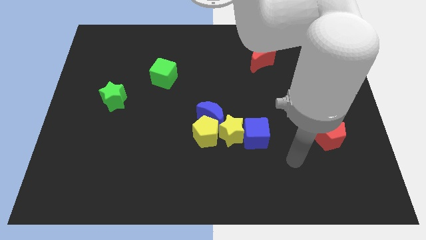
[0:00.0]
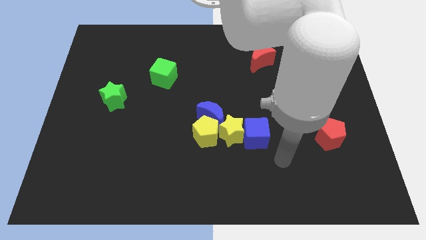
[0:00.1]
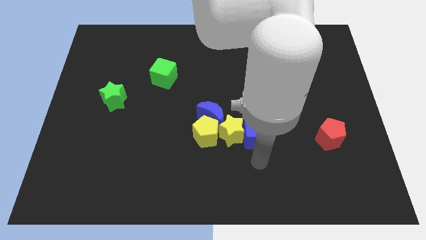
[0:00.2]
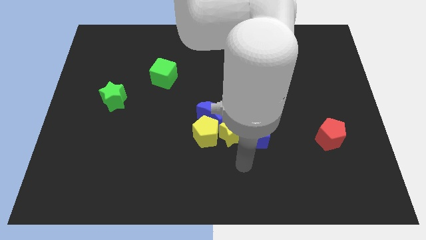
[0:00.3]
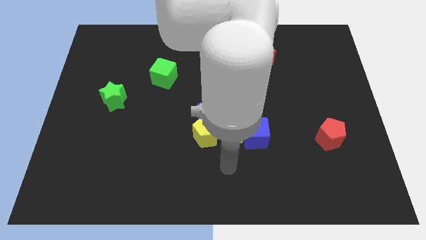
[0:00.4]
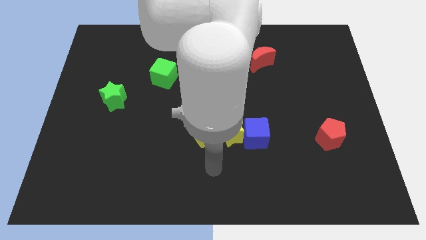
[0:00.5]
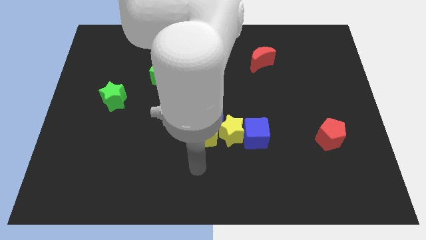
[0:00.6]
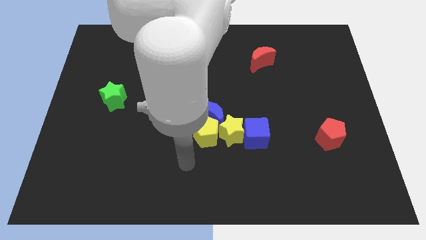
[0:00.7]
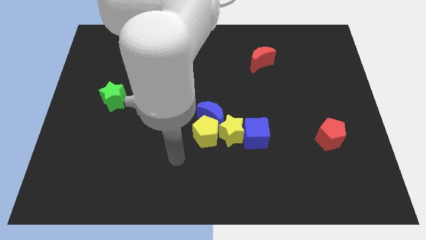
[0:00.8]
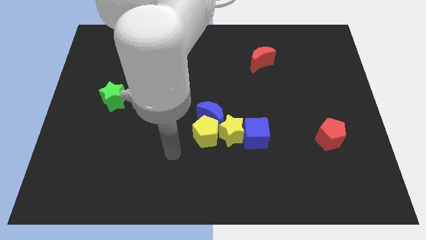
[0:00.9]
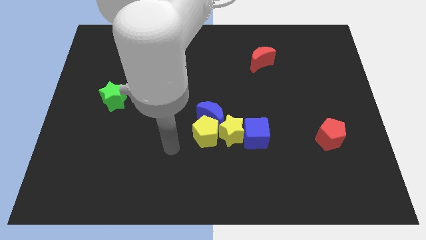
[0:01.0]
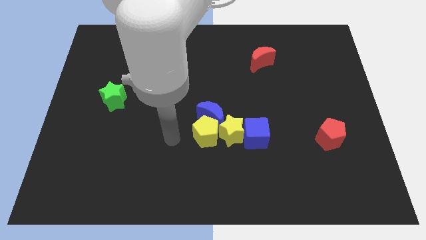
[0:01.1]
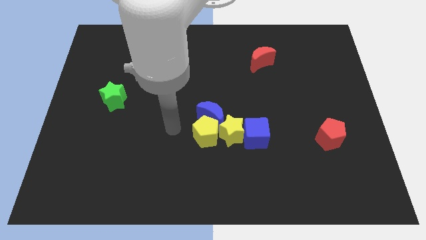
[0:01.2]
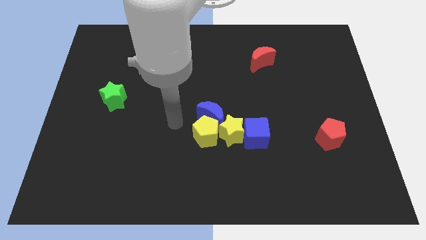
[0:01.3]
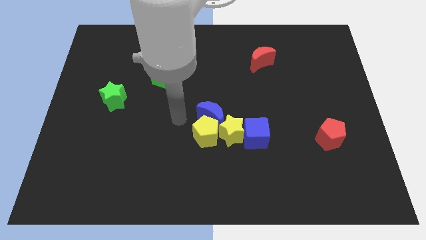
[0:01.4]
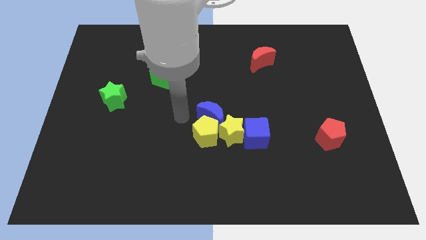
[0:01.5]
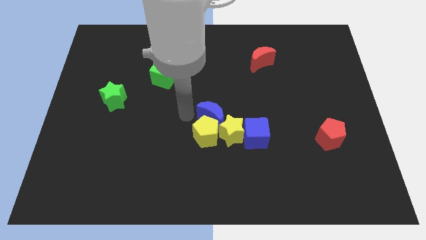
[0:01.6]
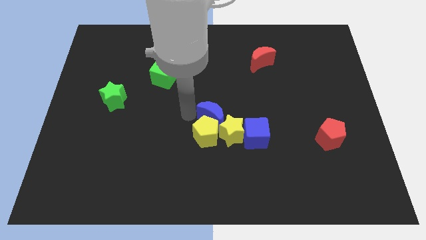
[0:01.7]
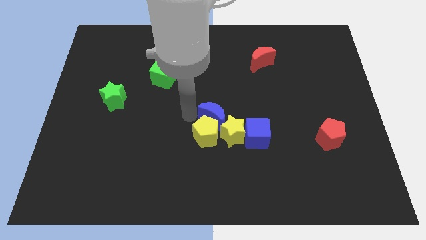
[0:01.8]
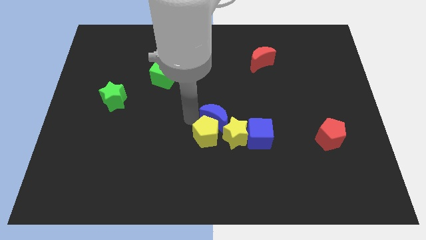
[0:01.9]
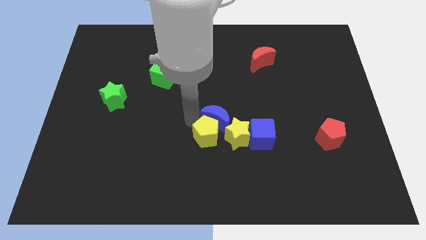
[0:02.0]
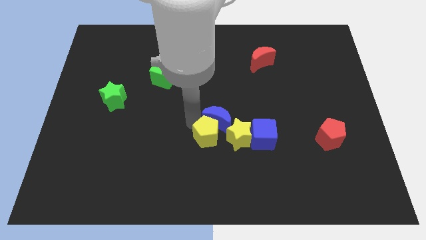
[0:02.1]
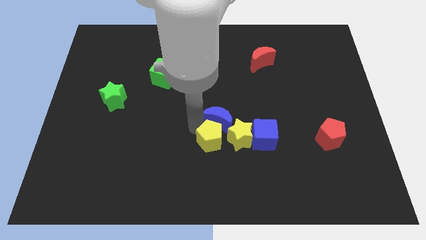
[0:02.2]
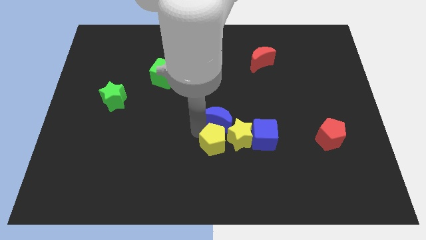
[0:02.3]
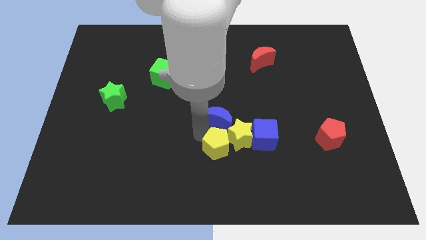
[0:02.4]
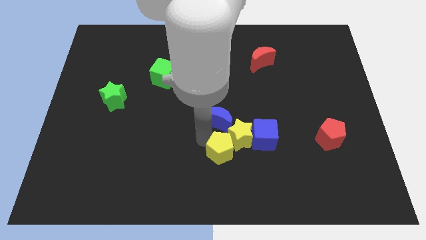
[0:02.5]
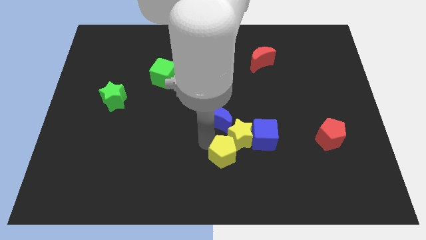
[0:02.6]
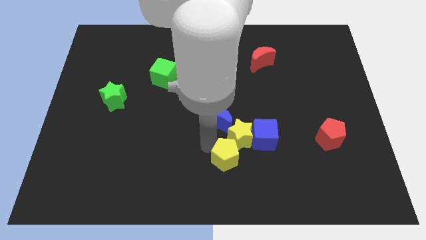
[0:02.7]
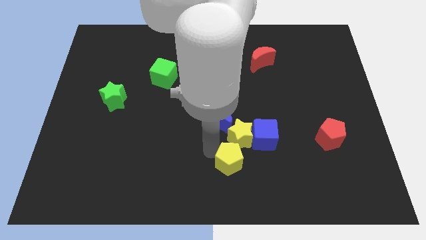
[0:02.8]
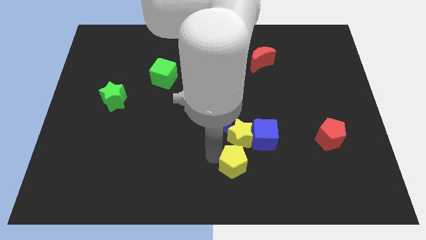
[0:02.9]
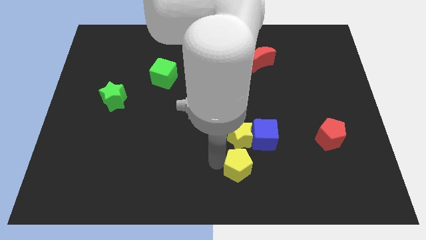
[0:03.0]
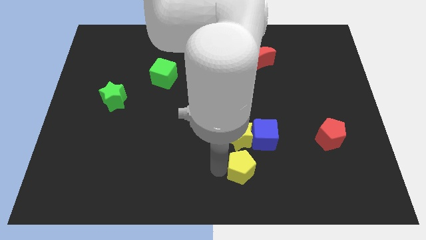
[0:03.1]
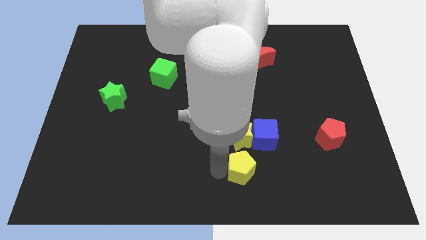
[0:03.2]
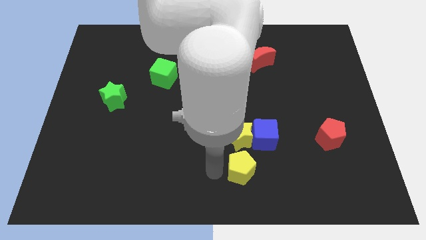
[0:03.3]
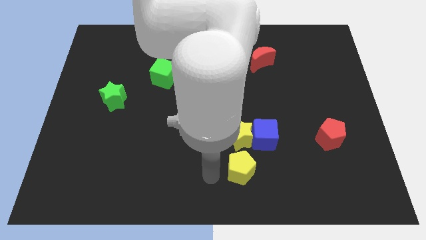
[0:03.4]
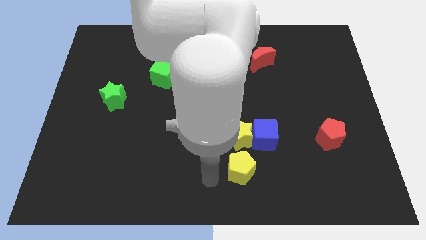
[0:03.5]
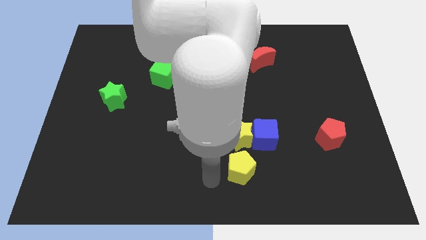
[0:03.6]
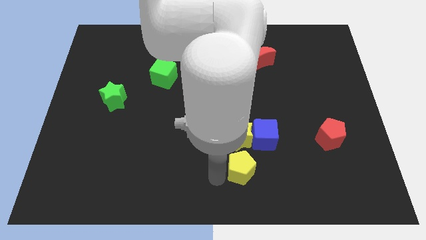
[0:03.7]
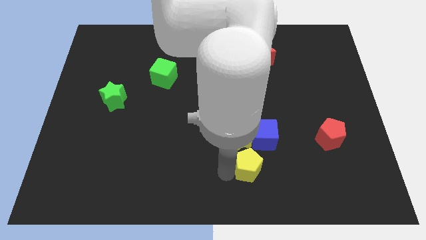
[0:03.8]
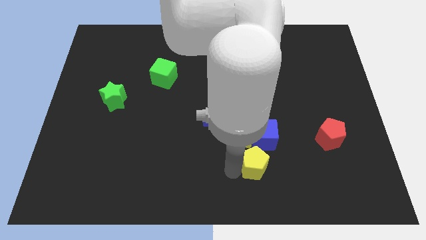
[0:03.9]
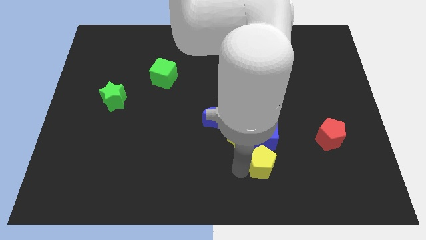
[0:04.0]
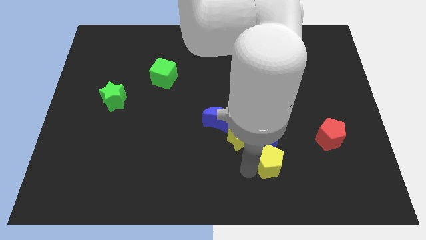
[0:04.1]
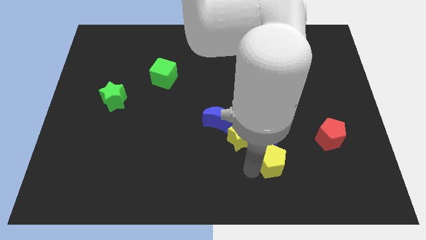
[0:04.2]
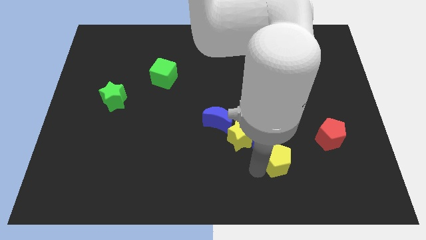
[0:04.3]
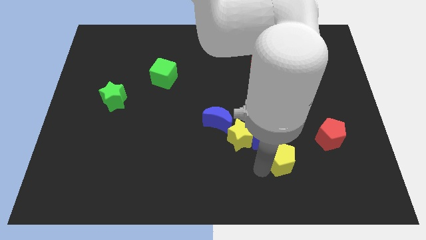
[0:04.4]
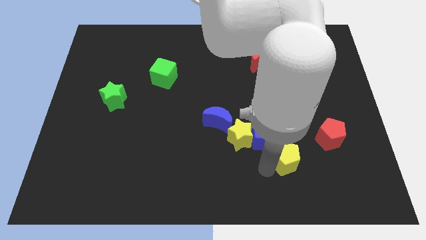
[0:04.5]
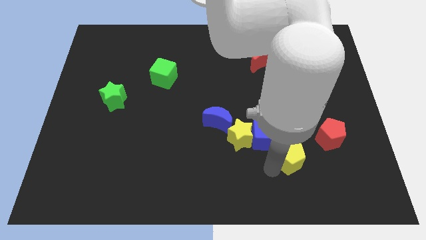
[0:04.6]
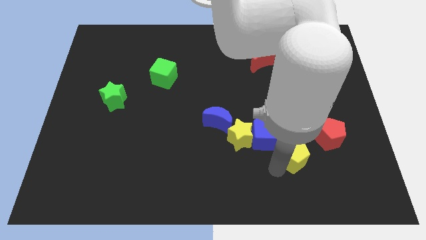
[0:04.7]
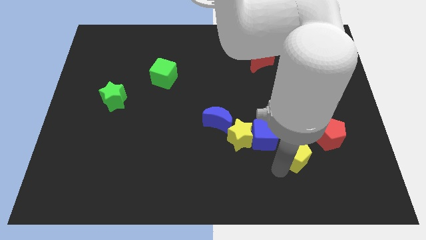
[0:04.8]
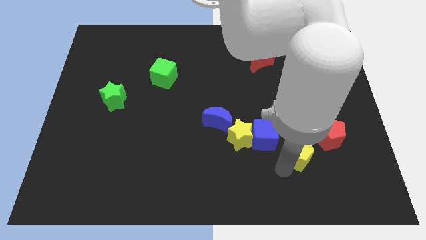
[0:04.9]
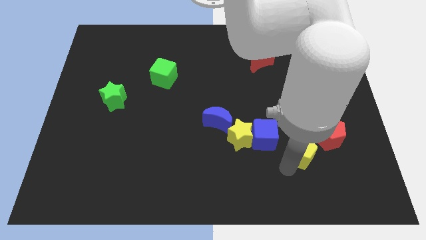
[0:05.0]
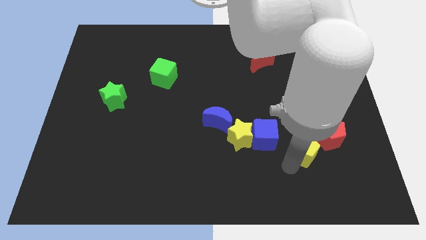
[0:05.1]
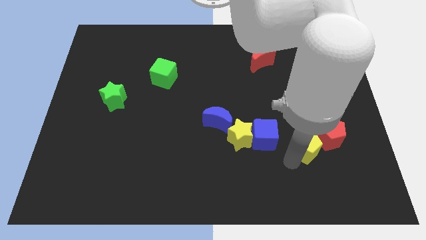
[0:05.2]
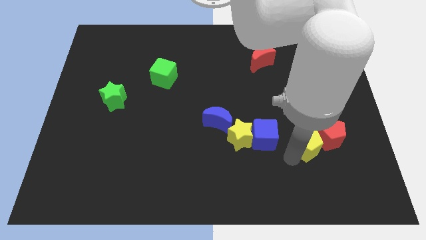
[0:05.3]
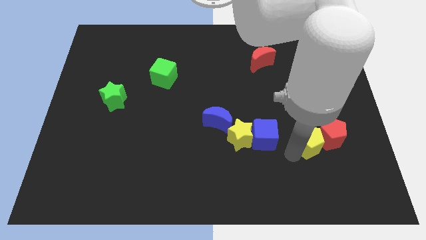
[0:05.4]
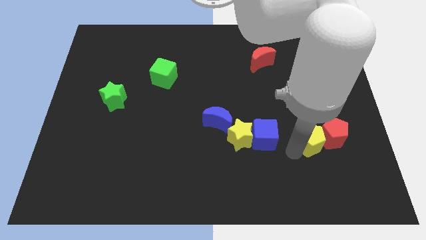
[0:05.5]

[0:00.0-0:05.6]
slide the yellow pentagon towards the red pentagon

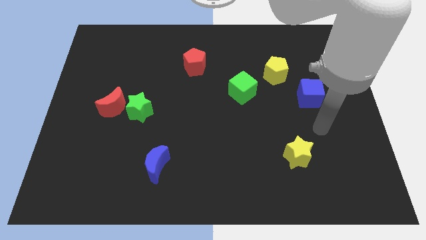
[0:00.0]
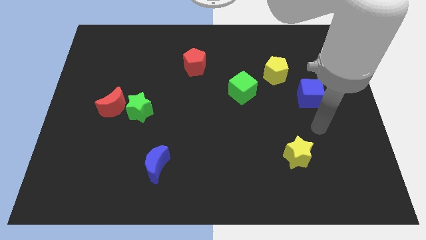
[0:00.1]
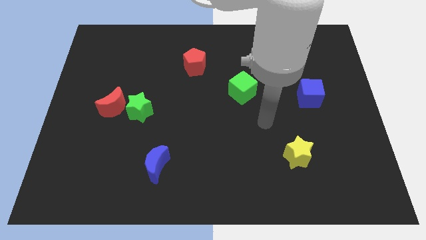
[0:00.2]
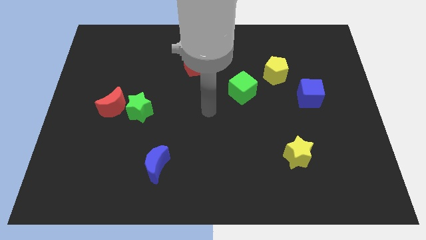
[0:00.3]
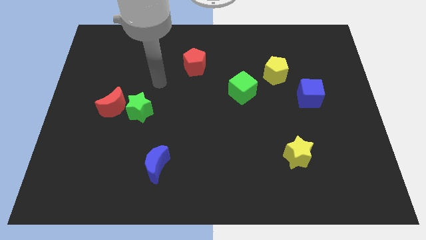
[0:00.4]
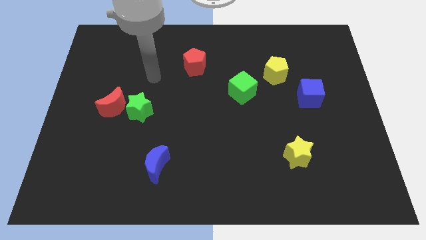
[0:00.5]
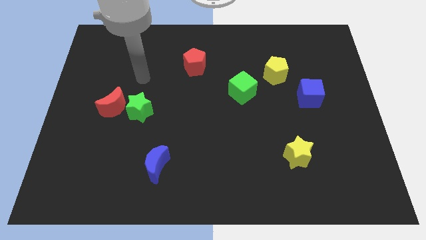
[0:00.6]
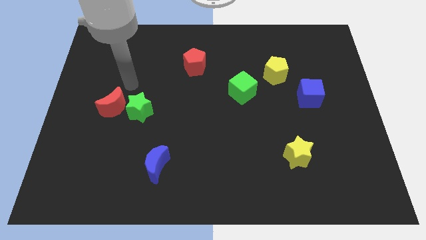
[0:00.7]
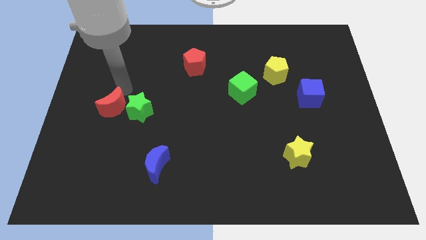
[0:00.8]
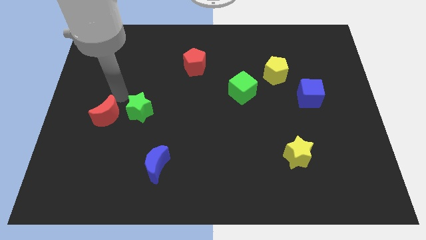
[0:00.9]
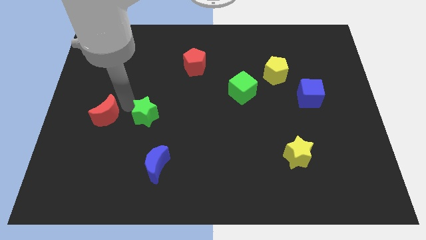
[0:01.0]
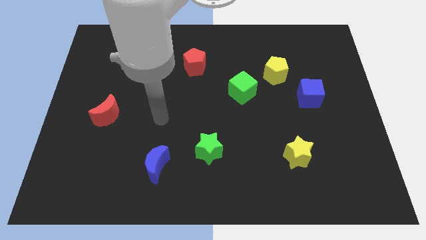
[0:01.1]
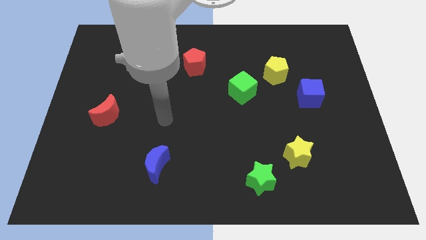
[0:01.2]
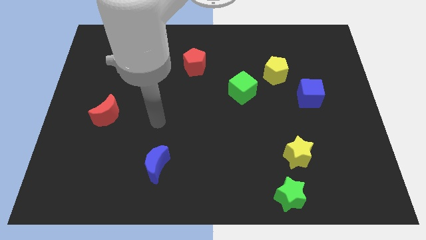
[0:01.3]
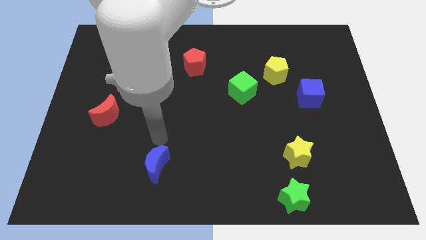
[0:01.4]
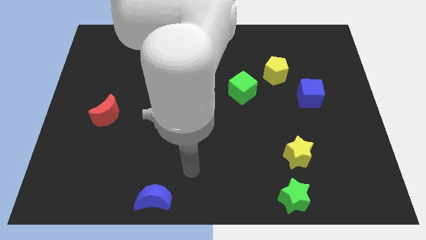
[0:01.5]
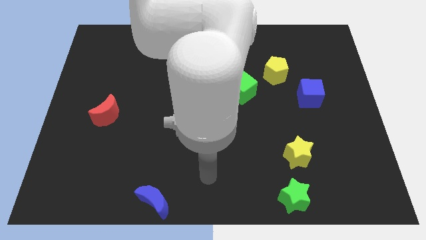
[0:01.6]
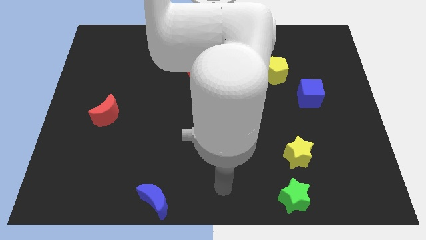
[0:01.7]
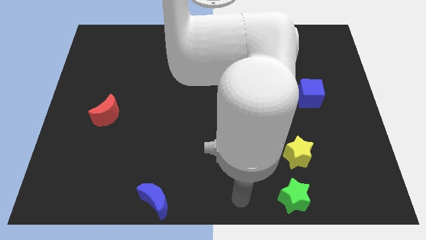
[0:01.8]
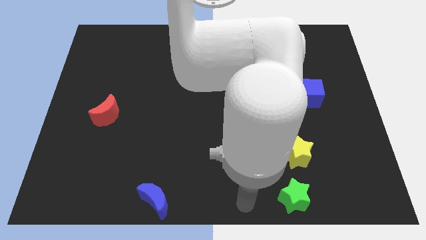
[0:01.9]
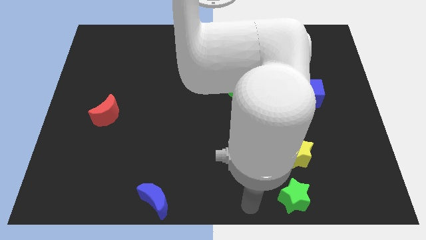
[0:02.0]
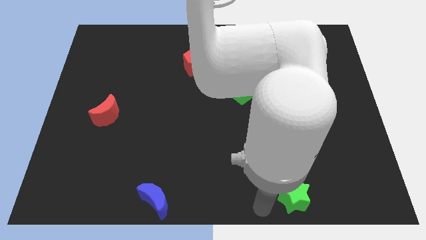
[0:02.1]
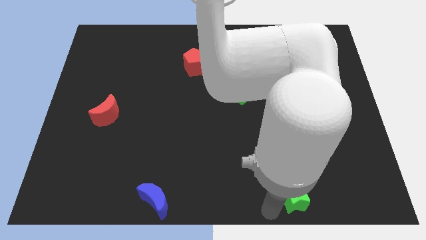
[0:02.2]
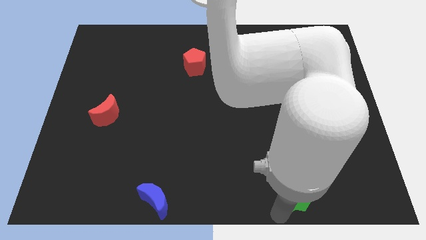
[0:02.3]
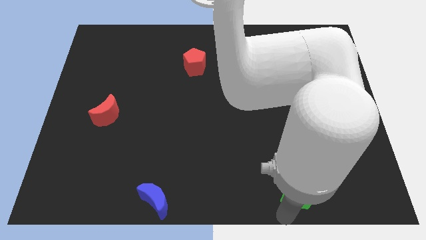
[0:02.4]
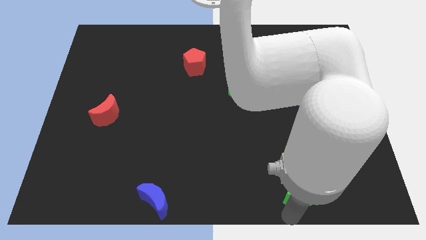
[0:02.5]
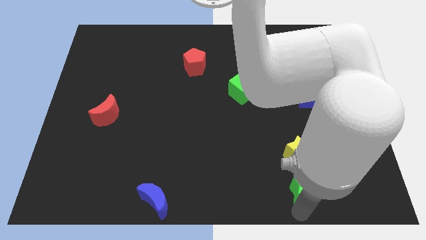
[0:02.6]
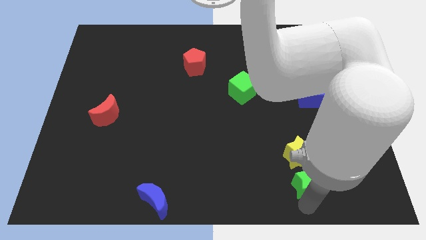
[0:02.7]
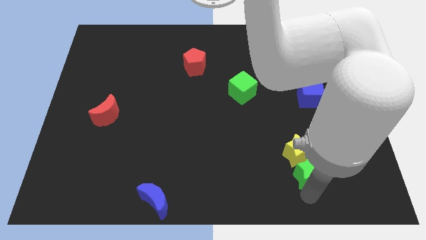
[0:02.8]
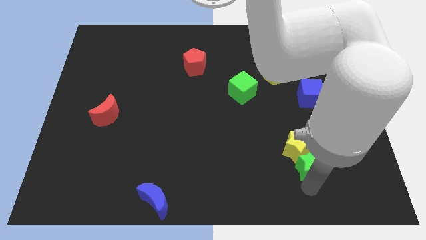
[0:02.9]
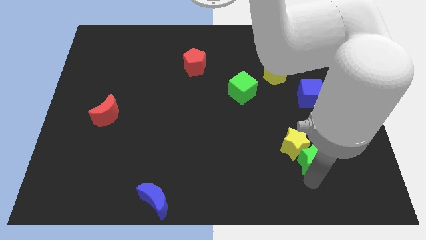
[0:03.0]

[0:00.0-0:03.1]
put the green star close to the yellow star
